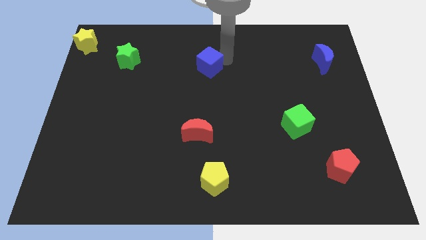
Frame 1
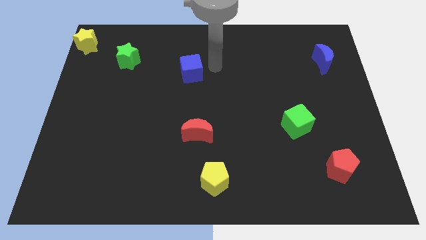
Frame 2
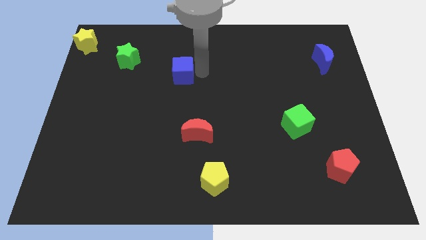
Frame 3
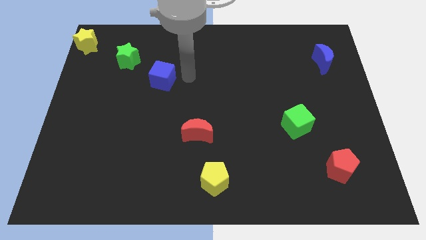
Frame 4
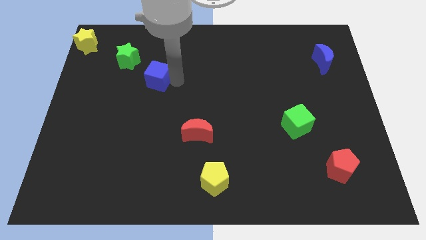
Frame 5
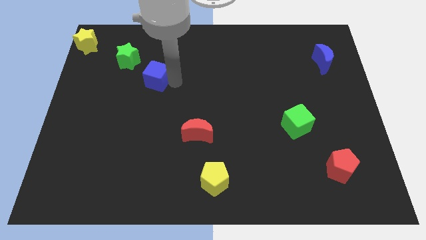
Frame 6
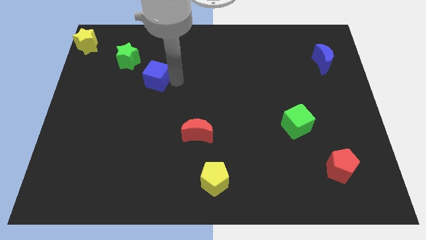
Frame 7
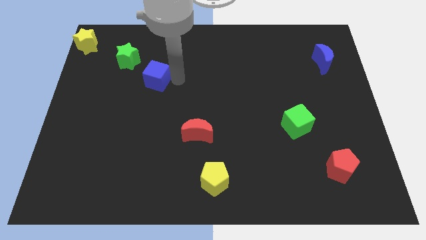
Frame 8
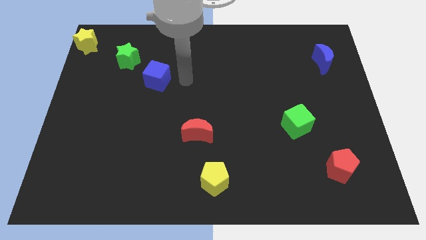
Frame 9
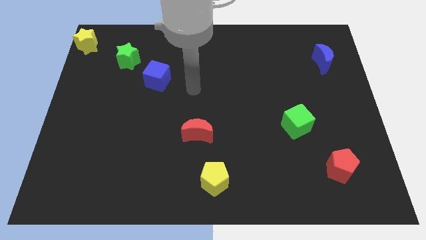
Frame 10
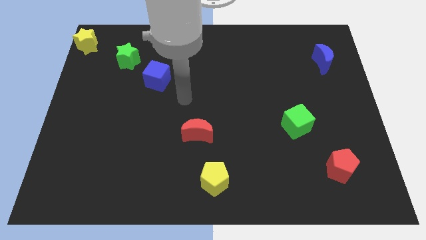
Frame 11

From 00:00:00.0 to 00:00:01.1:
place blue cube belowgreen star

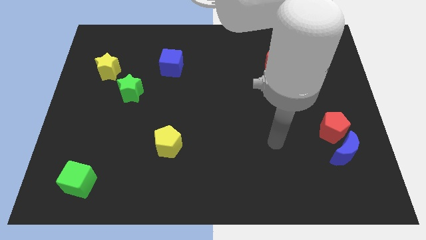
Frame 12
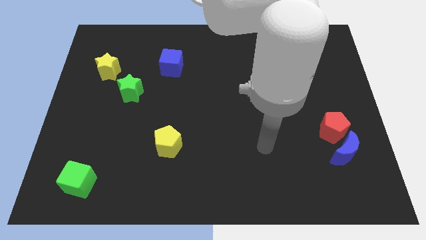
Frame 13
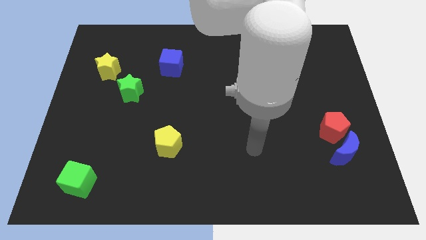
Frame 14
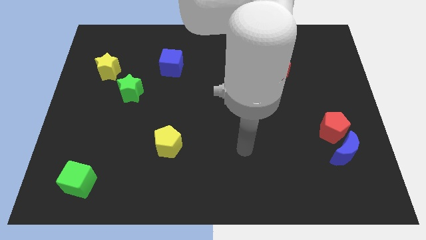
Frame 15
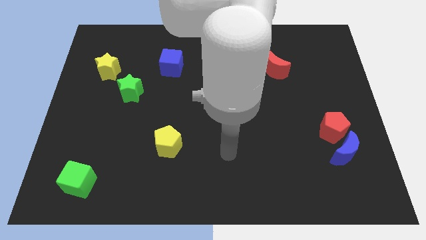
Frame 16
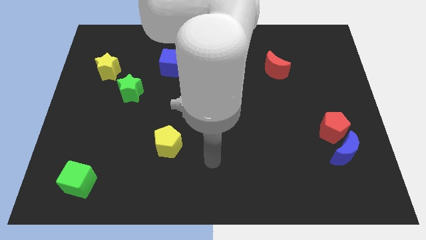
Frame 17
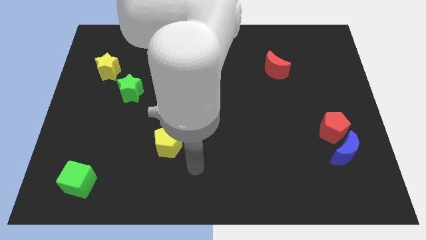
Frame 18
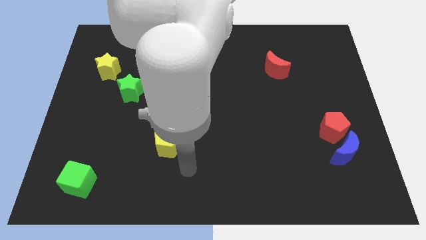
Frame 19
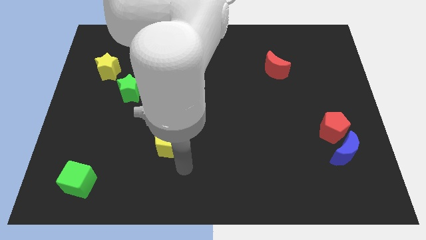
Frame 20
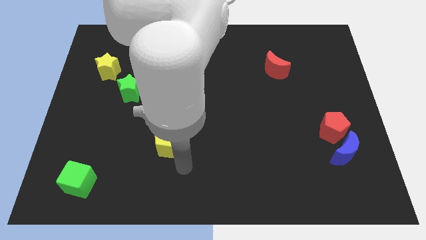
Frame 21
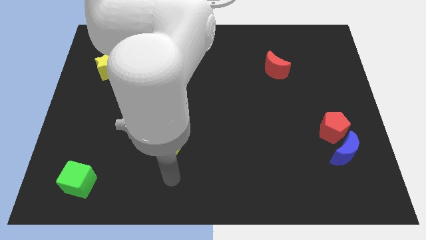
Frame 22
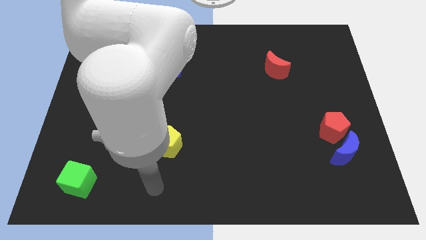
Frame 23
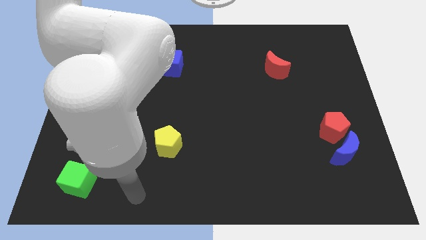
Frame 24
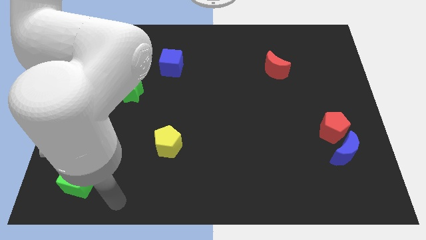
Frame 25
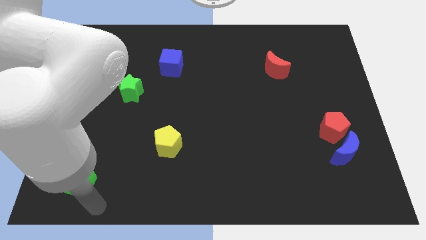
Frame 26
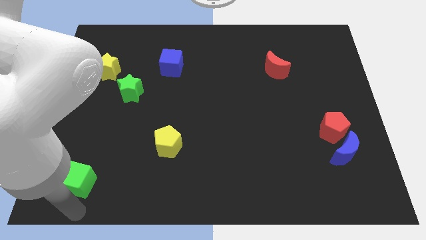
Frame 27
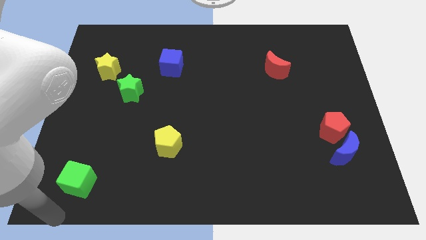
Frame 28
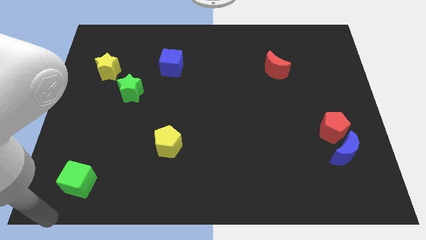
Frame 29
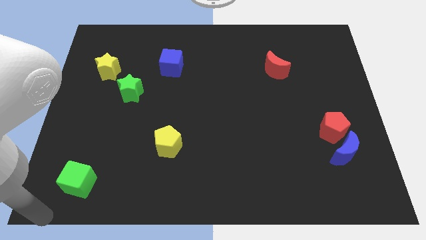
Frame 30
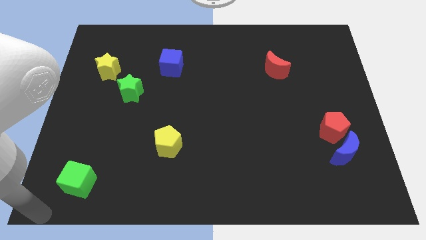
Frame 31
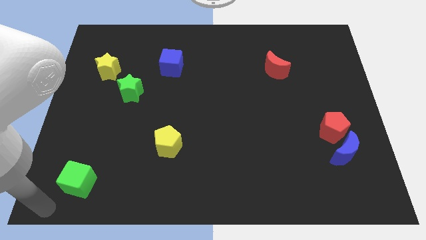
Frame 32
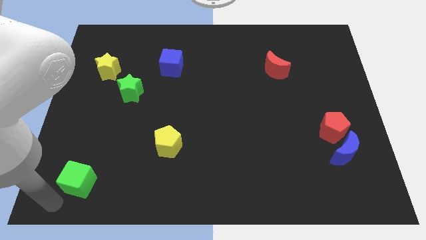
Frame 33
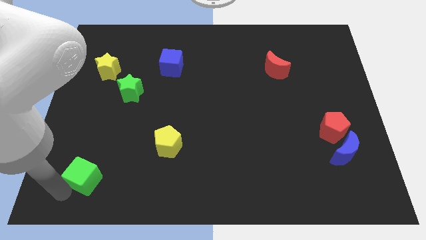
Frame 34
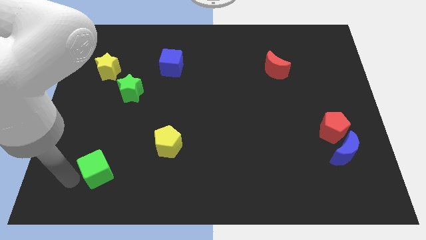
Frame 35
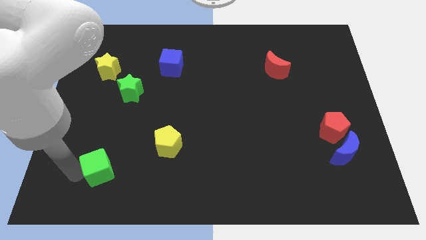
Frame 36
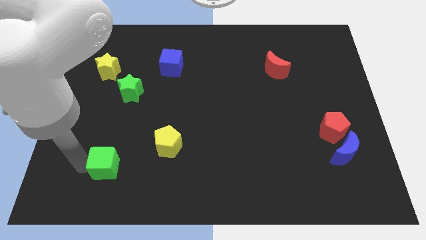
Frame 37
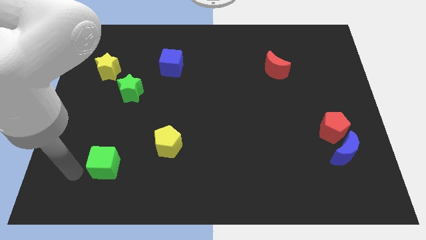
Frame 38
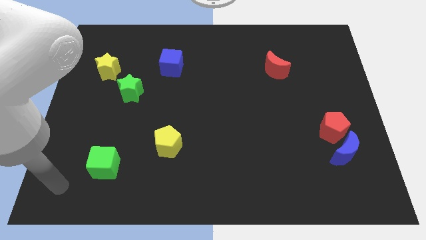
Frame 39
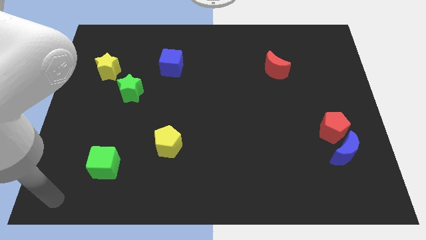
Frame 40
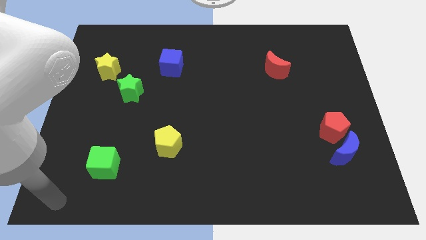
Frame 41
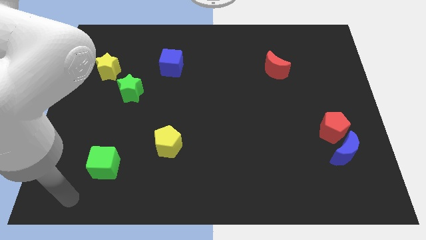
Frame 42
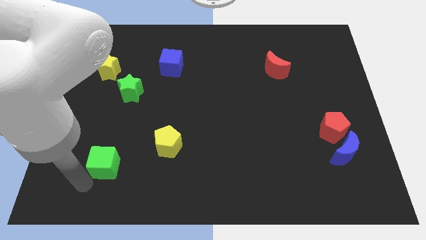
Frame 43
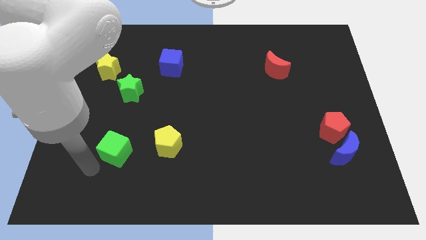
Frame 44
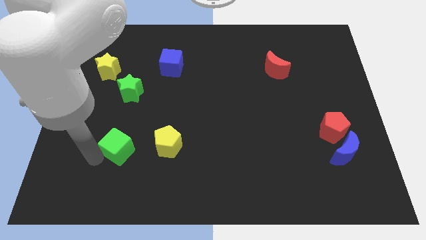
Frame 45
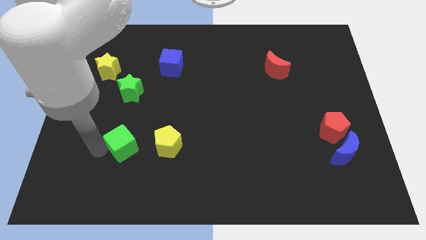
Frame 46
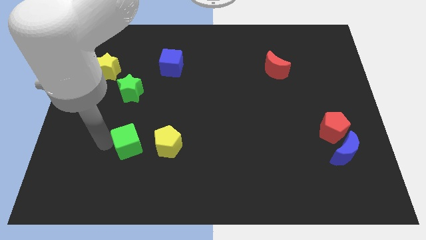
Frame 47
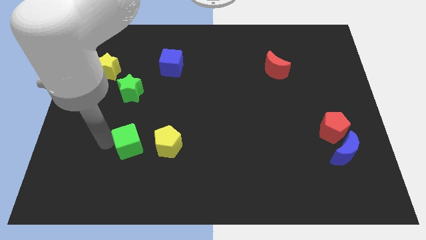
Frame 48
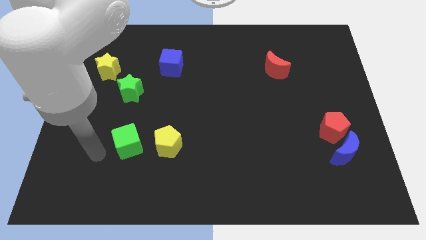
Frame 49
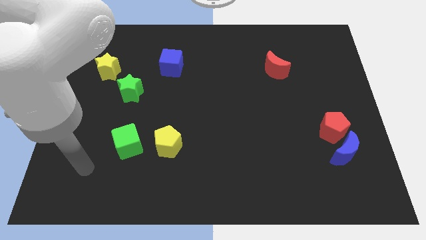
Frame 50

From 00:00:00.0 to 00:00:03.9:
place the green cube below the green star

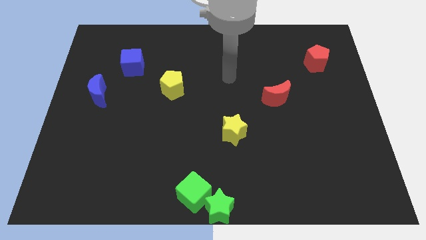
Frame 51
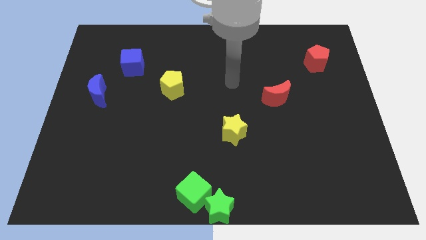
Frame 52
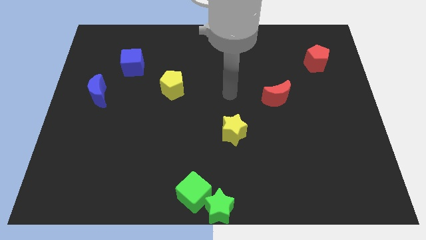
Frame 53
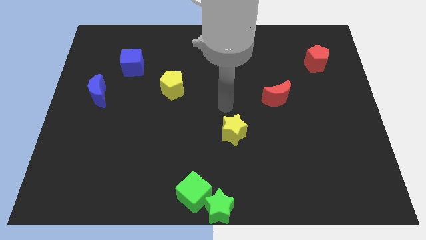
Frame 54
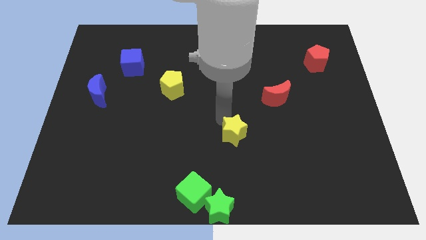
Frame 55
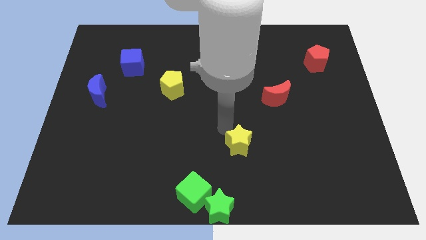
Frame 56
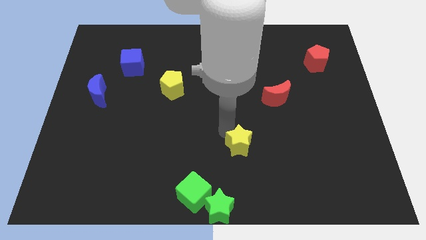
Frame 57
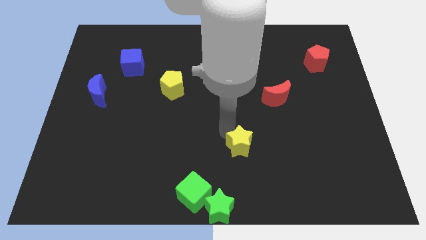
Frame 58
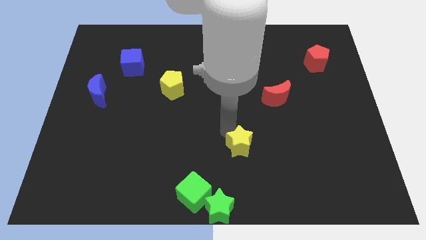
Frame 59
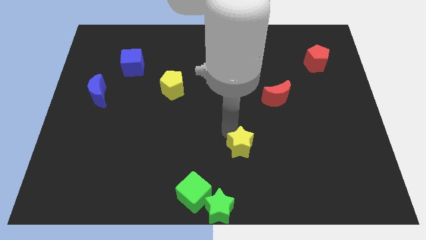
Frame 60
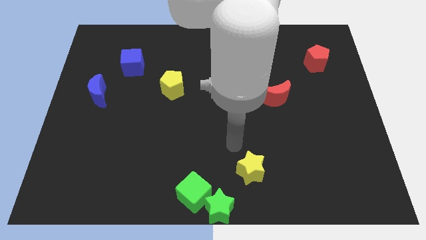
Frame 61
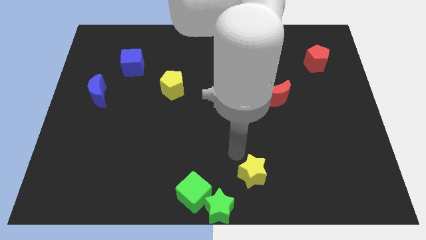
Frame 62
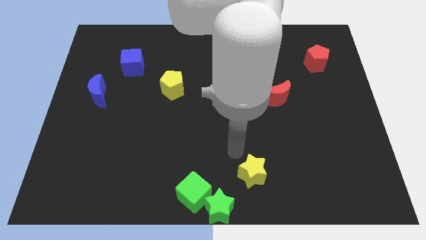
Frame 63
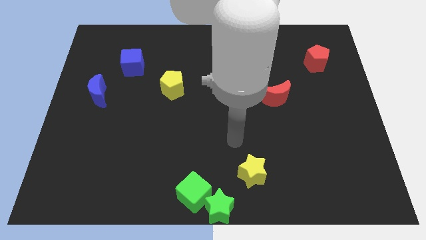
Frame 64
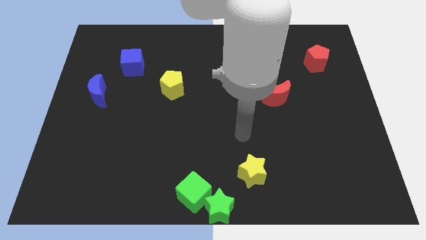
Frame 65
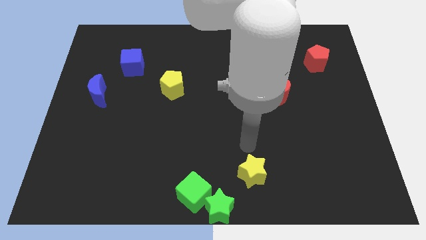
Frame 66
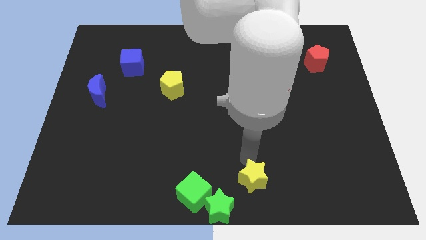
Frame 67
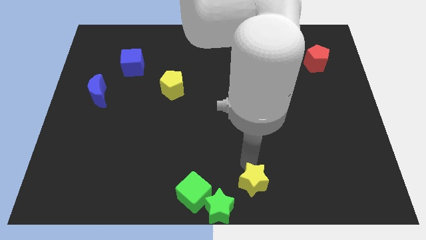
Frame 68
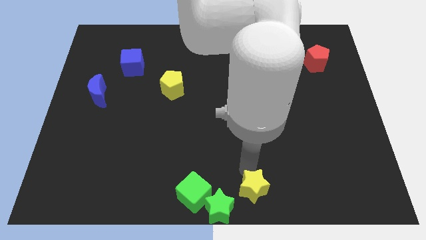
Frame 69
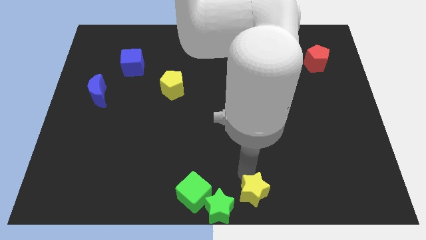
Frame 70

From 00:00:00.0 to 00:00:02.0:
place the yellow star diagonally top right to green star

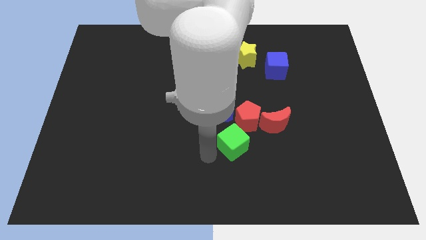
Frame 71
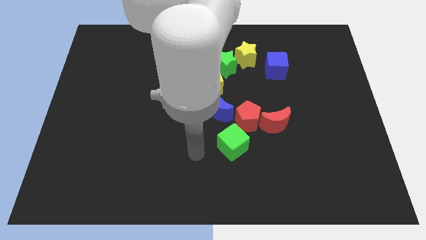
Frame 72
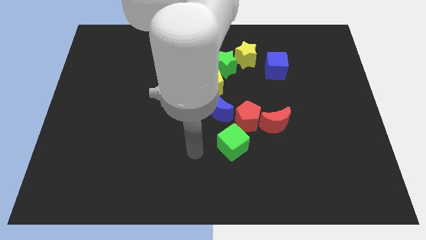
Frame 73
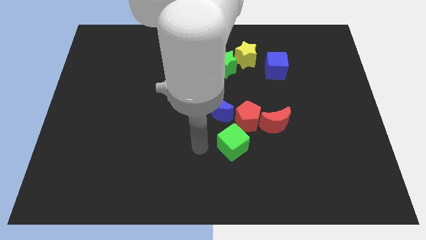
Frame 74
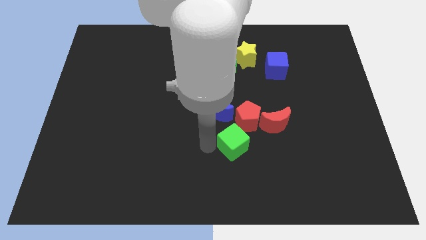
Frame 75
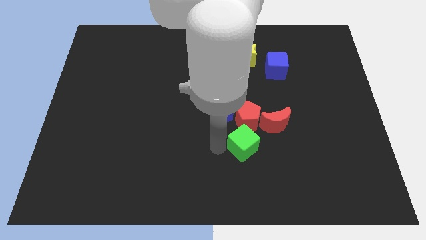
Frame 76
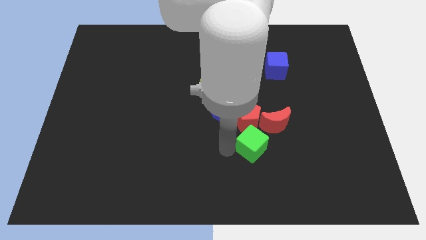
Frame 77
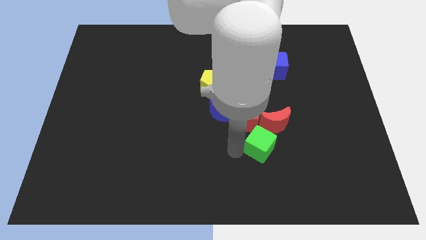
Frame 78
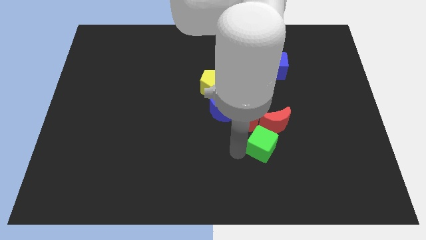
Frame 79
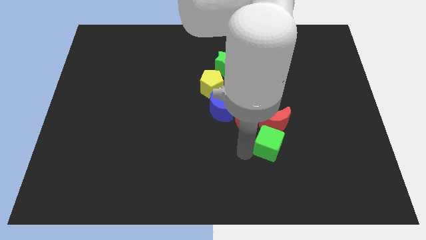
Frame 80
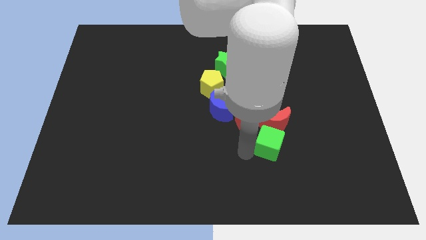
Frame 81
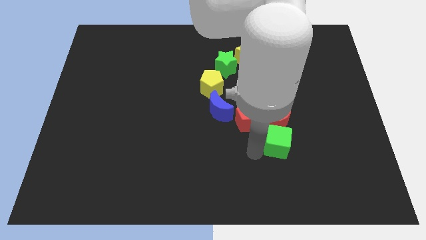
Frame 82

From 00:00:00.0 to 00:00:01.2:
place the green cube below the red moon

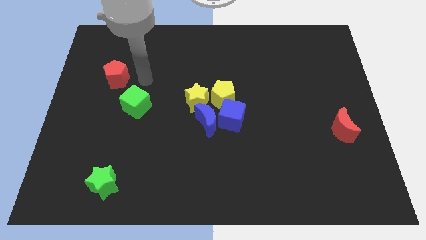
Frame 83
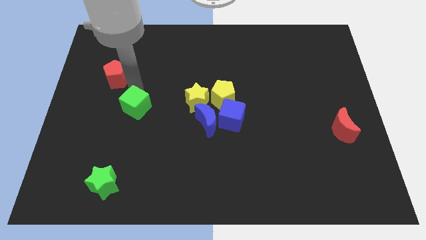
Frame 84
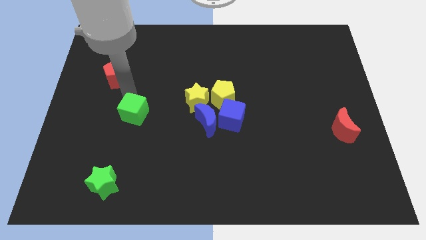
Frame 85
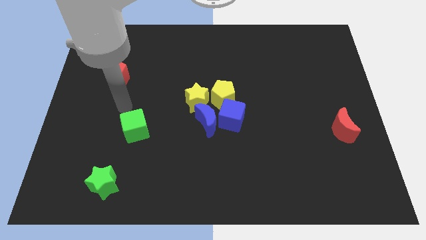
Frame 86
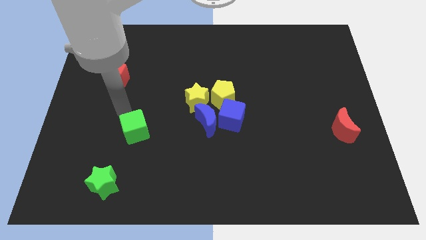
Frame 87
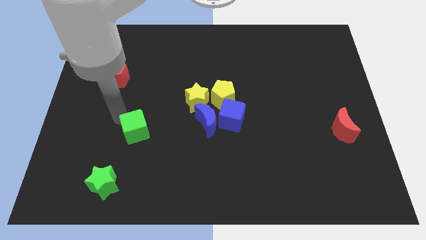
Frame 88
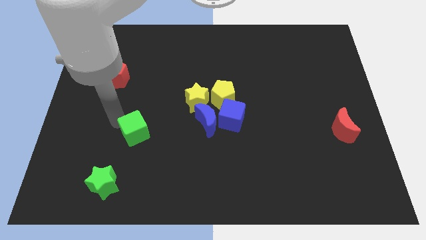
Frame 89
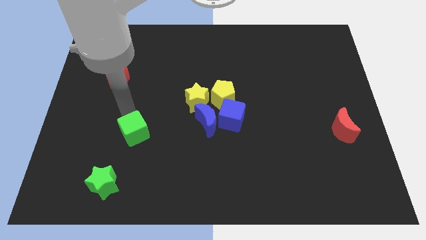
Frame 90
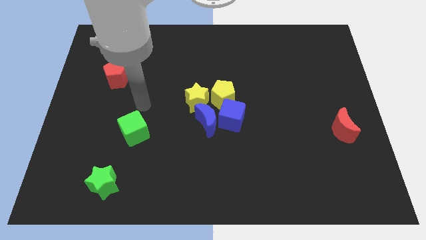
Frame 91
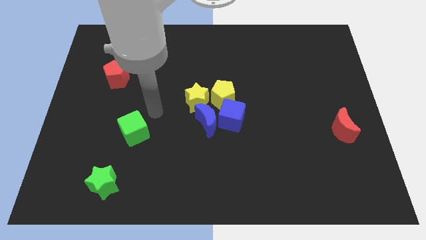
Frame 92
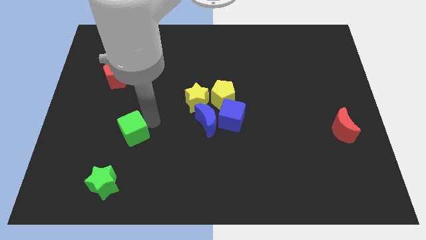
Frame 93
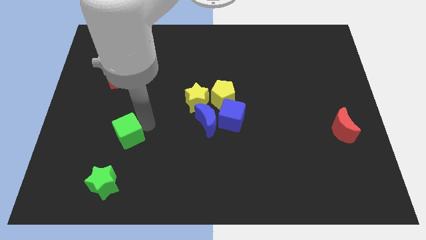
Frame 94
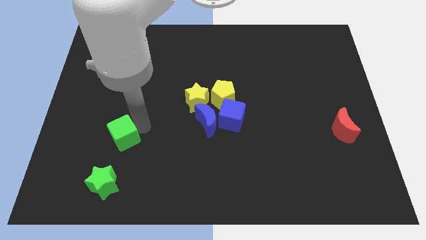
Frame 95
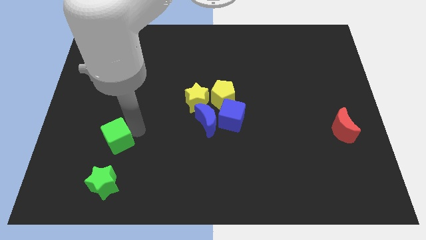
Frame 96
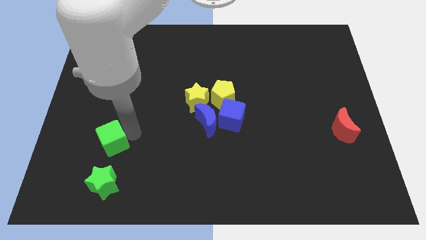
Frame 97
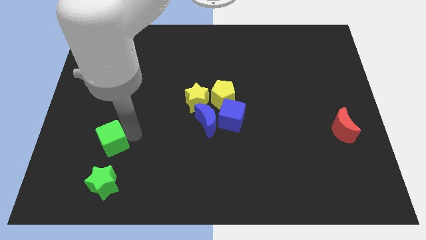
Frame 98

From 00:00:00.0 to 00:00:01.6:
push the green cube towards the green star
